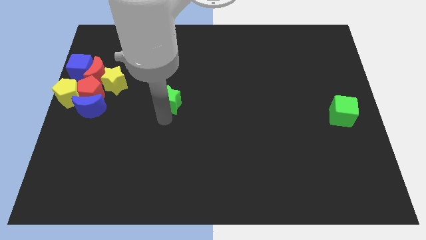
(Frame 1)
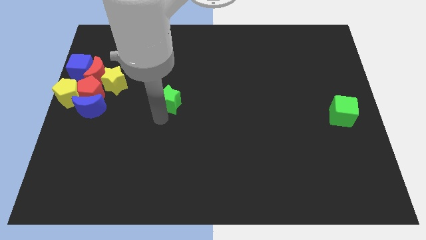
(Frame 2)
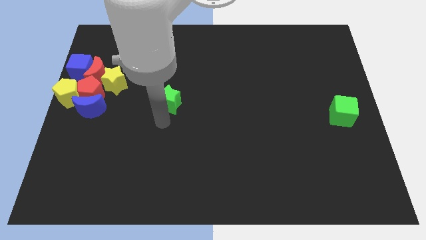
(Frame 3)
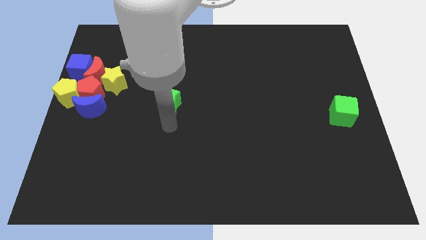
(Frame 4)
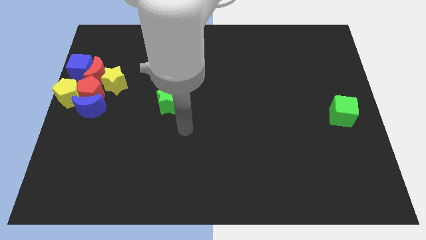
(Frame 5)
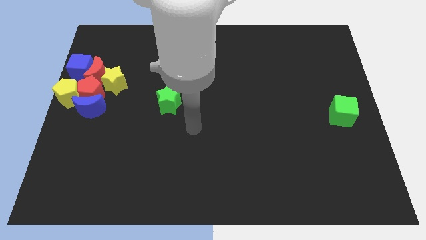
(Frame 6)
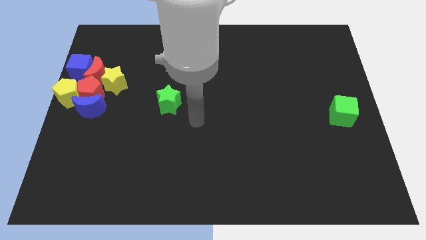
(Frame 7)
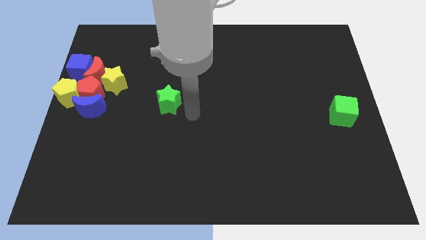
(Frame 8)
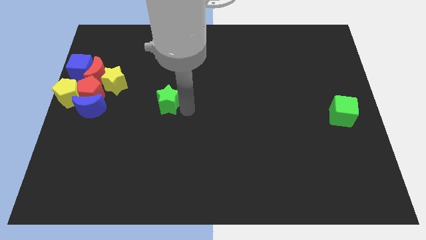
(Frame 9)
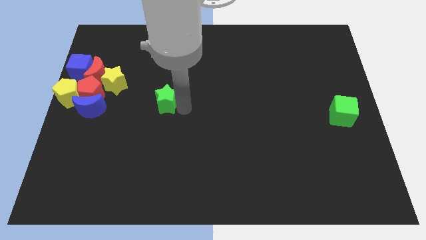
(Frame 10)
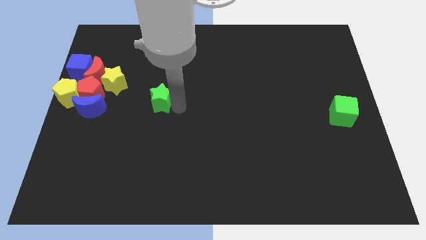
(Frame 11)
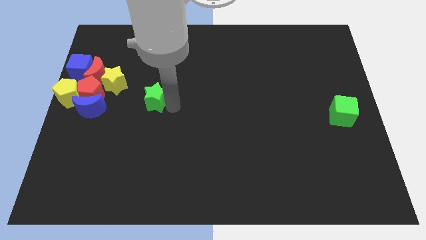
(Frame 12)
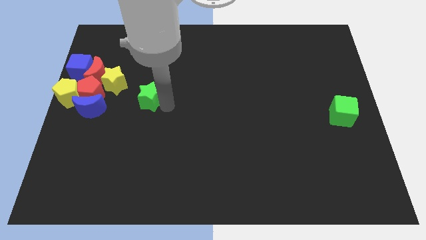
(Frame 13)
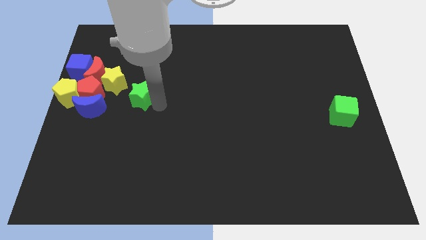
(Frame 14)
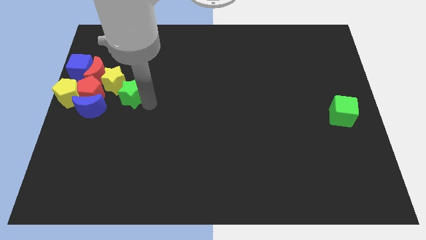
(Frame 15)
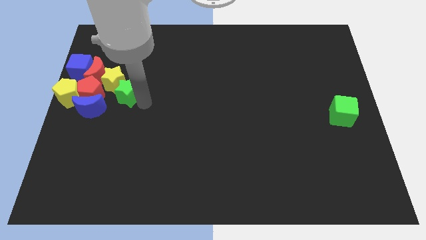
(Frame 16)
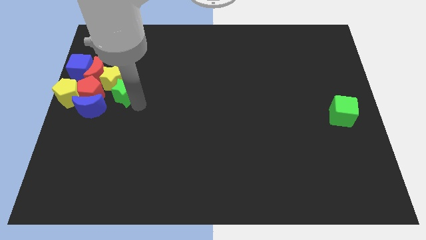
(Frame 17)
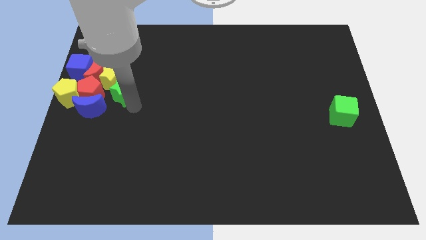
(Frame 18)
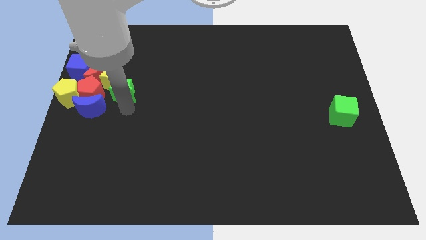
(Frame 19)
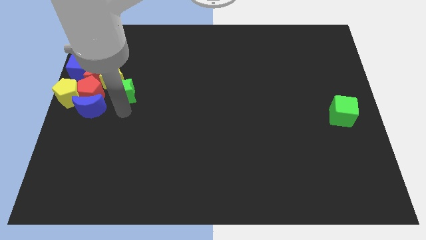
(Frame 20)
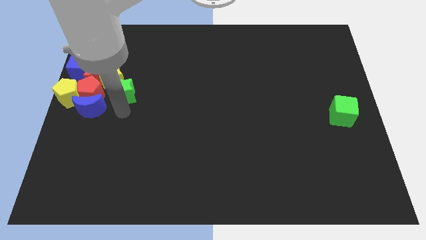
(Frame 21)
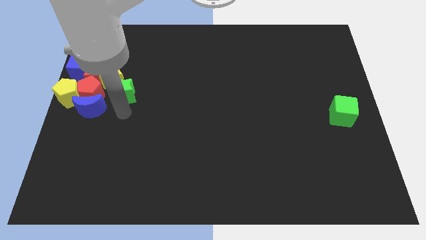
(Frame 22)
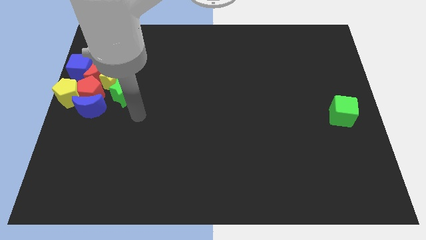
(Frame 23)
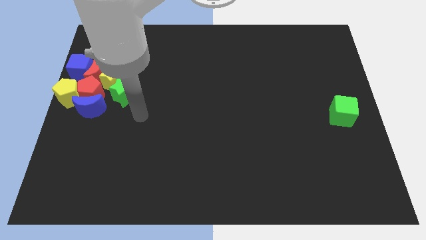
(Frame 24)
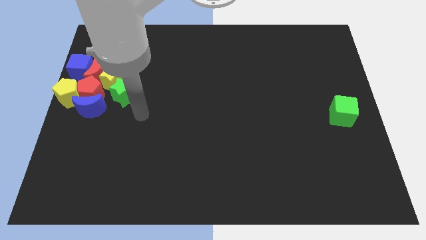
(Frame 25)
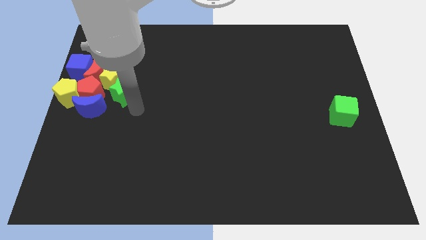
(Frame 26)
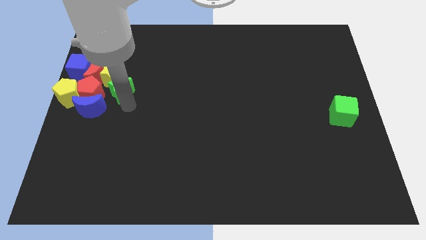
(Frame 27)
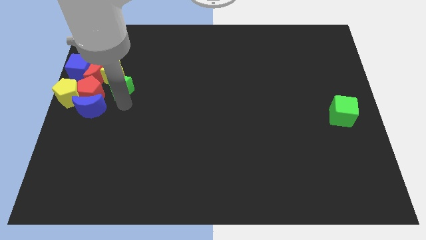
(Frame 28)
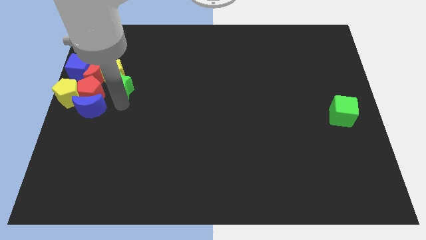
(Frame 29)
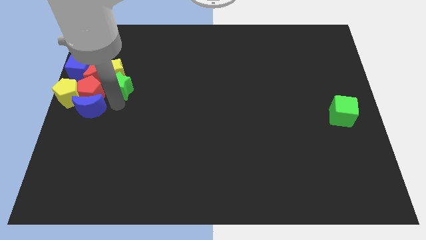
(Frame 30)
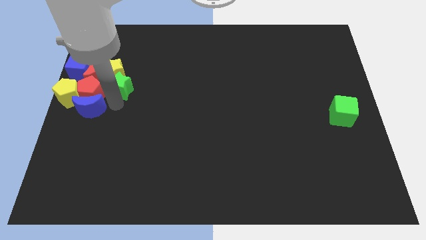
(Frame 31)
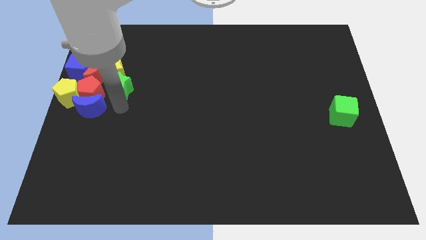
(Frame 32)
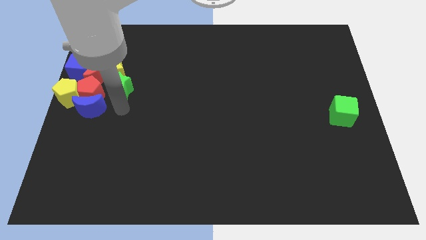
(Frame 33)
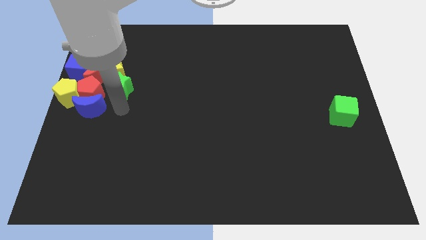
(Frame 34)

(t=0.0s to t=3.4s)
push the green star close to the group of blocks

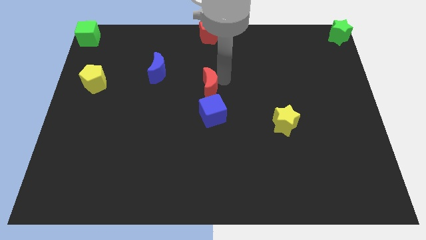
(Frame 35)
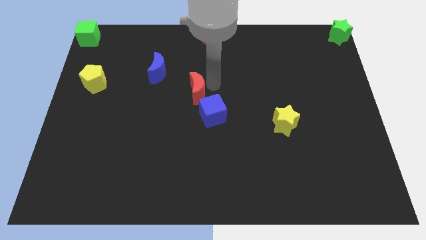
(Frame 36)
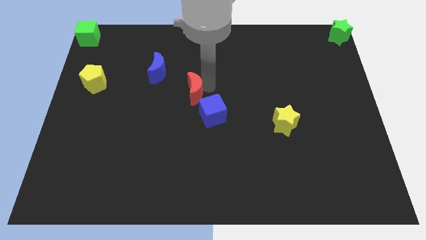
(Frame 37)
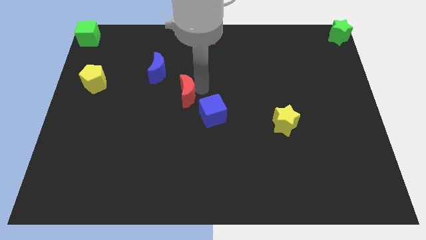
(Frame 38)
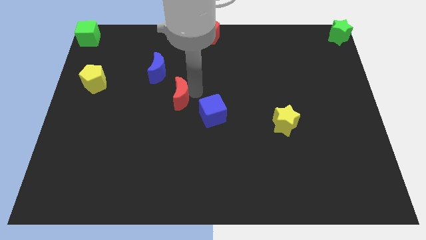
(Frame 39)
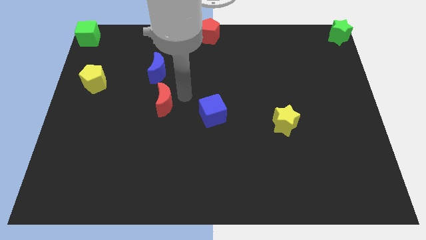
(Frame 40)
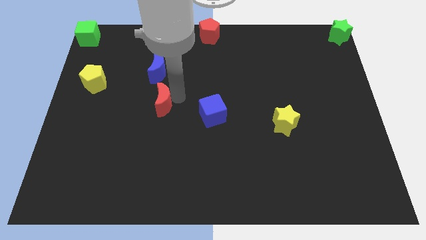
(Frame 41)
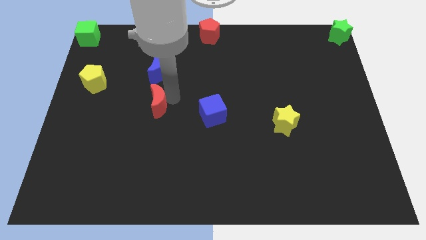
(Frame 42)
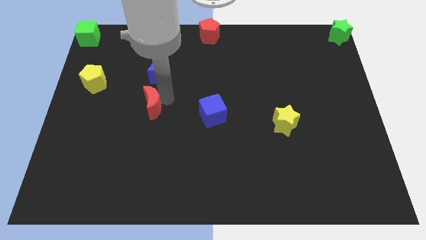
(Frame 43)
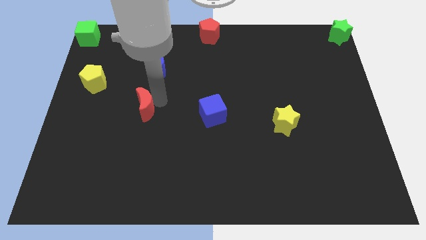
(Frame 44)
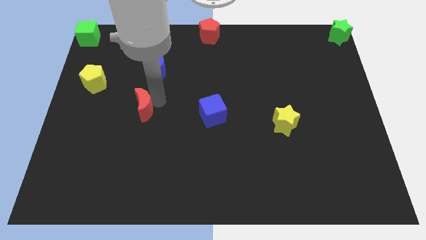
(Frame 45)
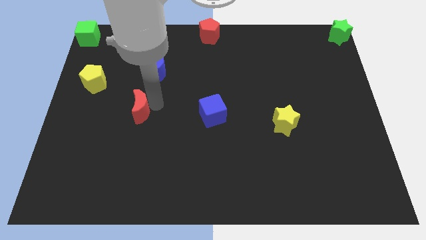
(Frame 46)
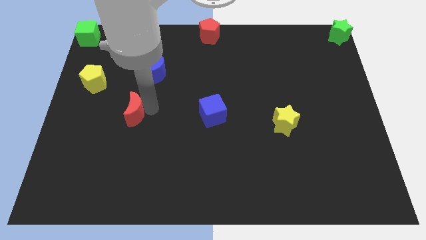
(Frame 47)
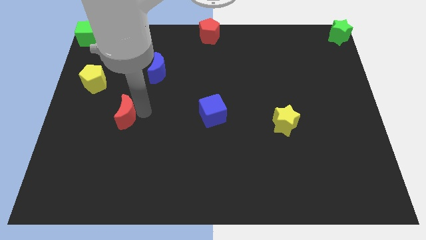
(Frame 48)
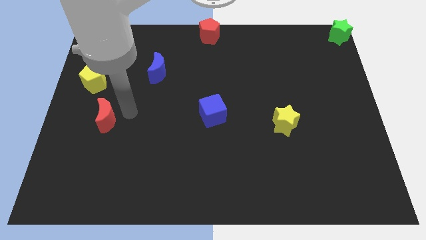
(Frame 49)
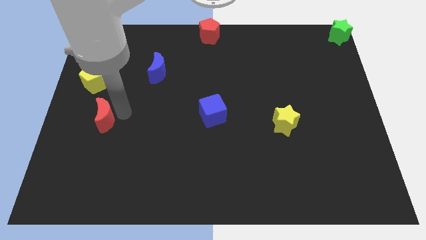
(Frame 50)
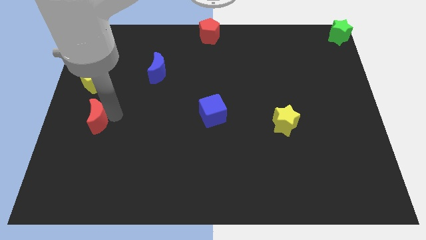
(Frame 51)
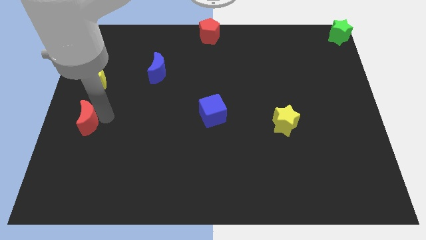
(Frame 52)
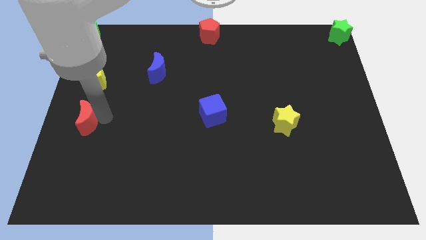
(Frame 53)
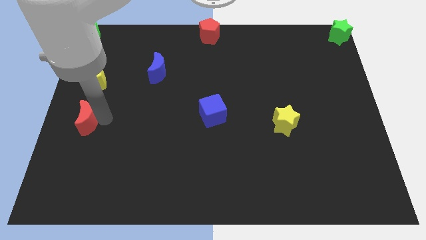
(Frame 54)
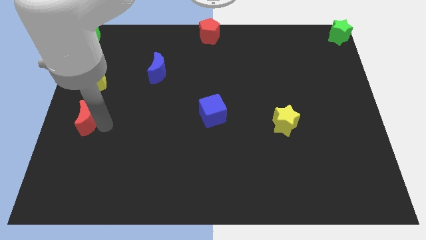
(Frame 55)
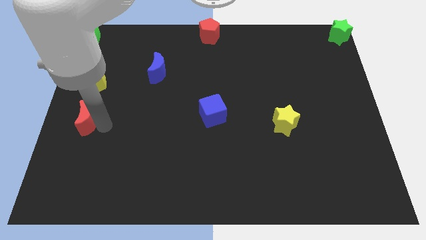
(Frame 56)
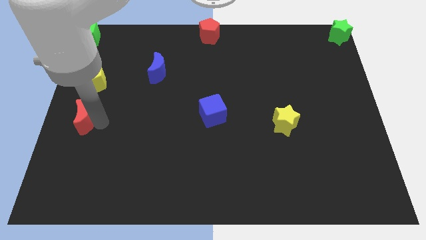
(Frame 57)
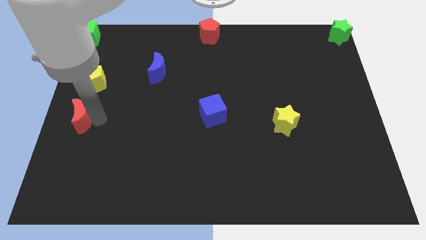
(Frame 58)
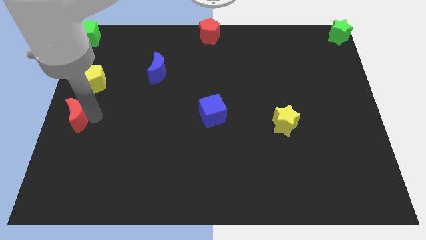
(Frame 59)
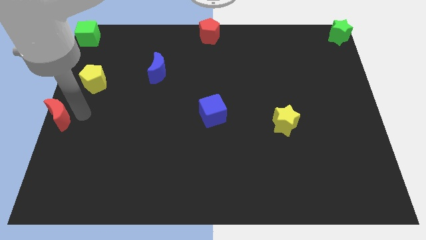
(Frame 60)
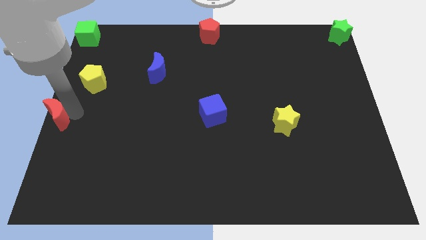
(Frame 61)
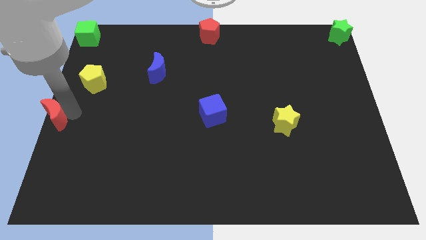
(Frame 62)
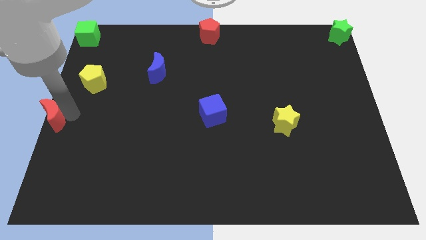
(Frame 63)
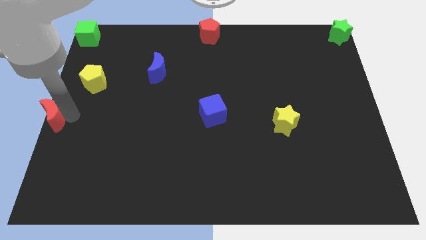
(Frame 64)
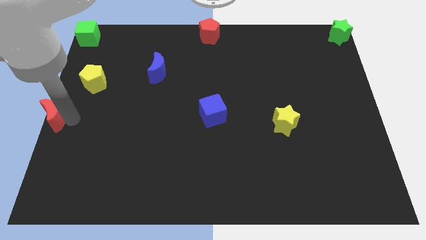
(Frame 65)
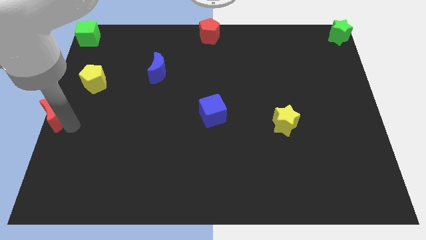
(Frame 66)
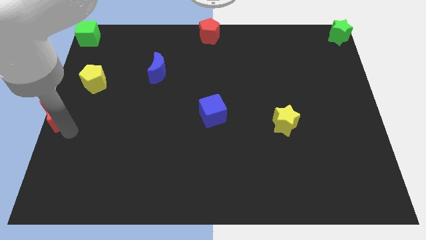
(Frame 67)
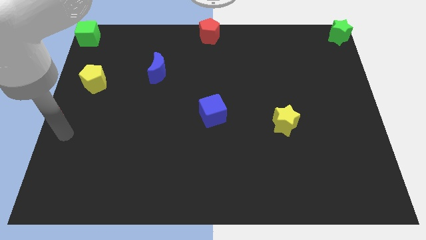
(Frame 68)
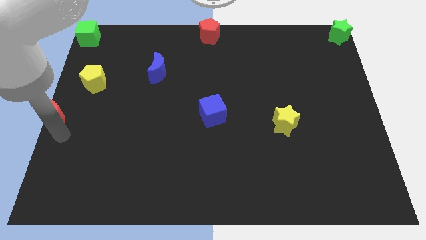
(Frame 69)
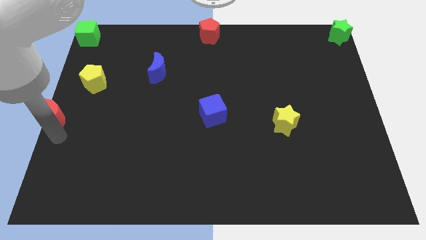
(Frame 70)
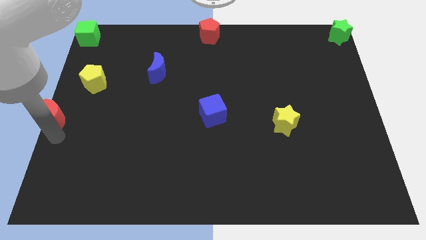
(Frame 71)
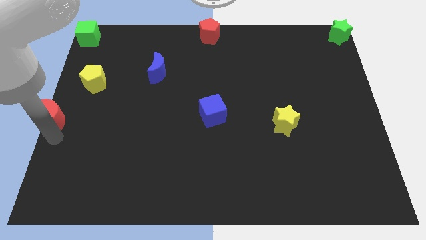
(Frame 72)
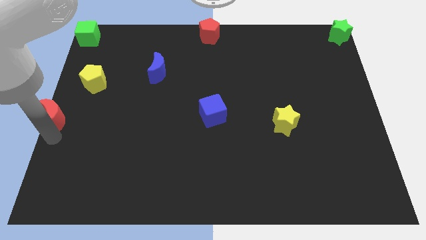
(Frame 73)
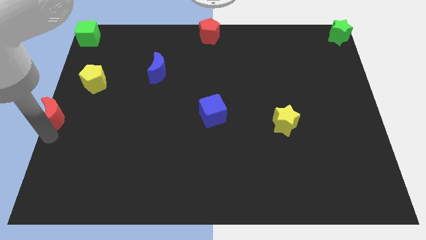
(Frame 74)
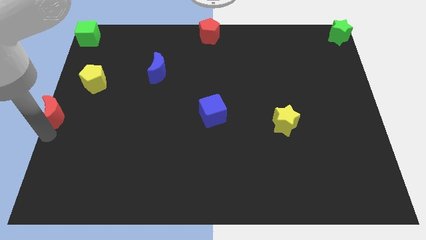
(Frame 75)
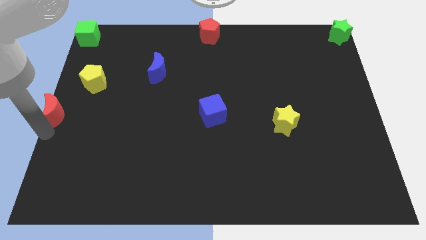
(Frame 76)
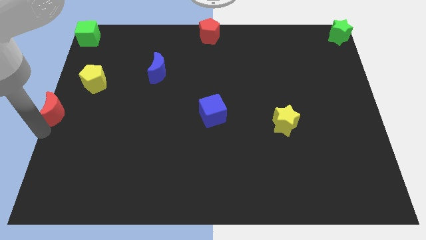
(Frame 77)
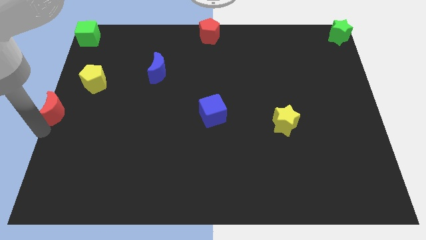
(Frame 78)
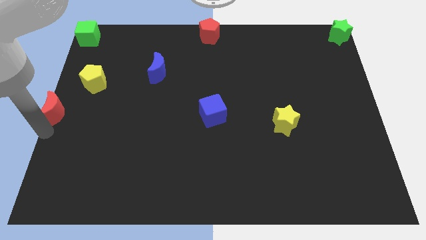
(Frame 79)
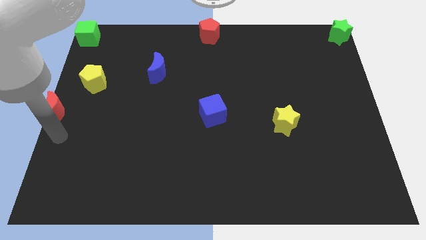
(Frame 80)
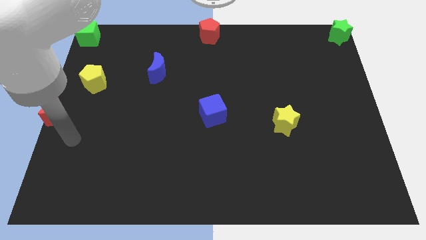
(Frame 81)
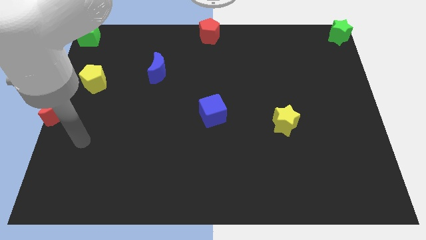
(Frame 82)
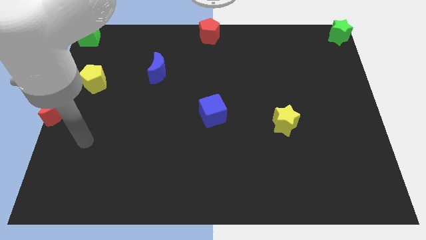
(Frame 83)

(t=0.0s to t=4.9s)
place the red moon at the center left of the board

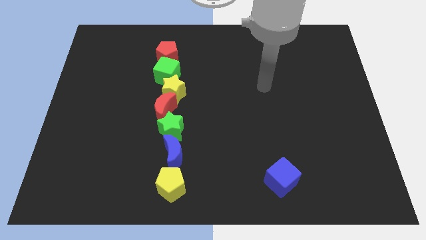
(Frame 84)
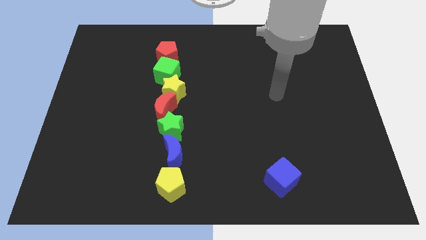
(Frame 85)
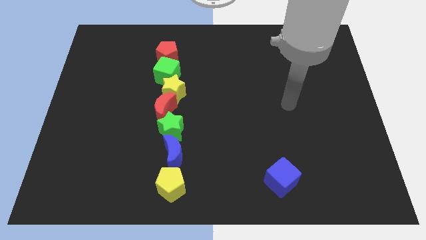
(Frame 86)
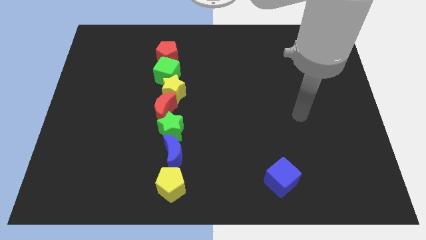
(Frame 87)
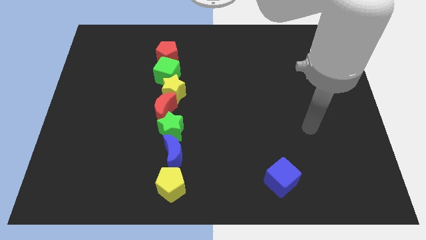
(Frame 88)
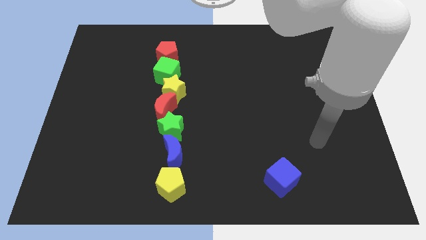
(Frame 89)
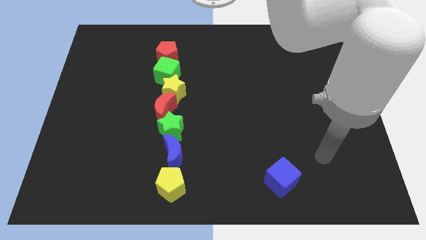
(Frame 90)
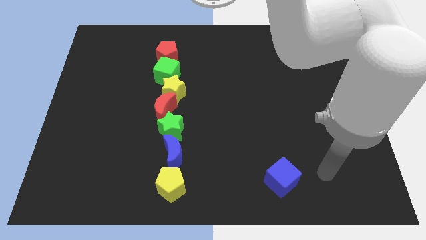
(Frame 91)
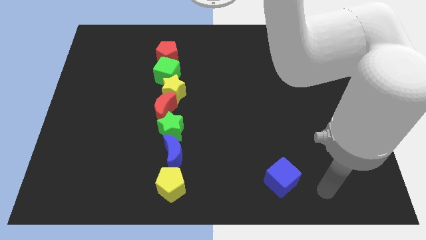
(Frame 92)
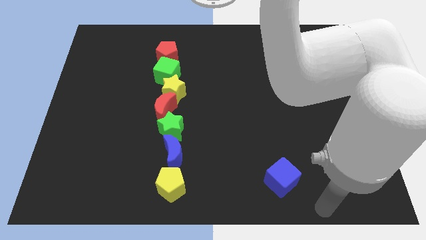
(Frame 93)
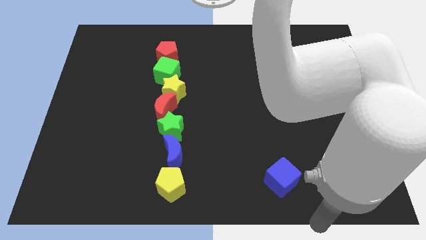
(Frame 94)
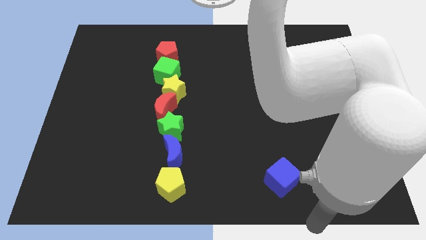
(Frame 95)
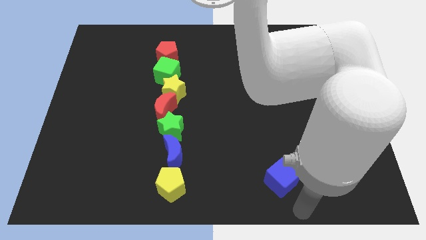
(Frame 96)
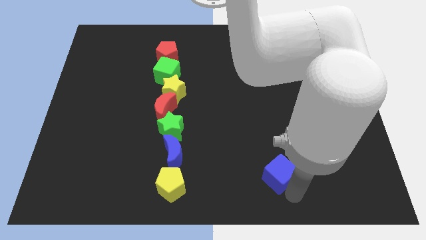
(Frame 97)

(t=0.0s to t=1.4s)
move the arm to the bottom of the blue cube
